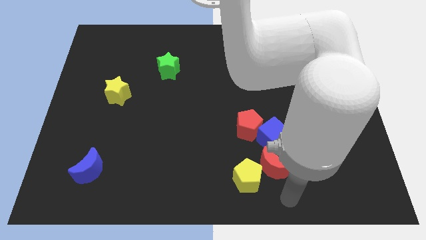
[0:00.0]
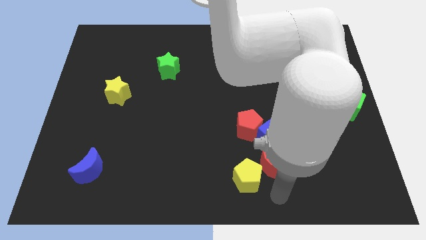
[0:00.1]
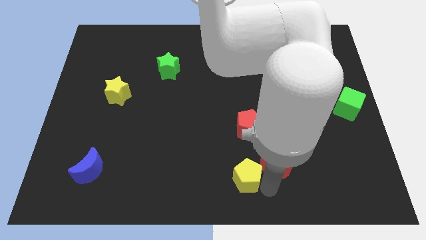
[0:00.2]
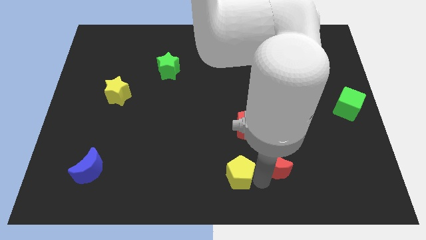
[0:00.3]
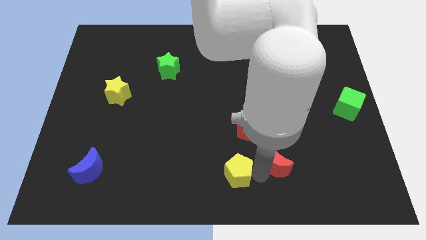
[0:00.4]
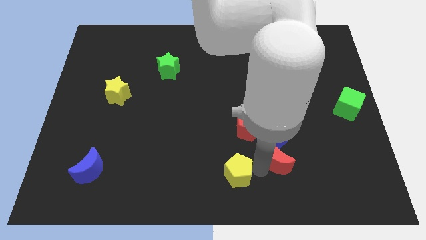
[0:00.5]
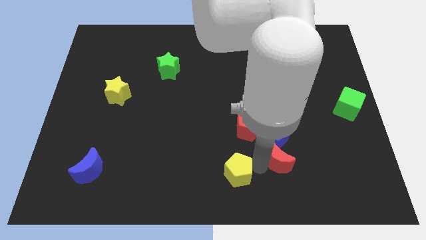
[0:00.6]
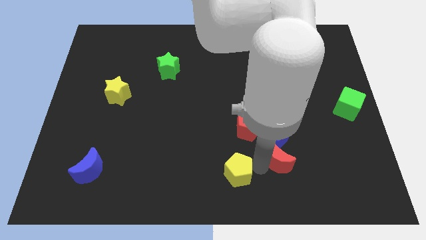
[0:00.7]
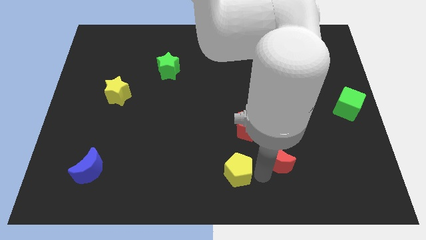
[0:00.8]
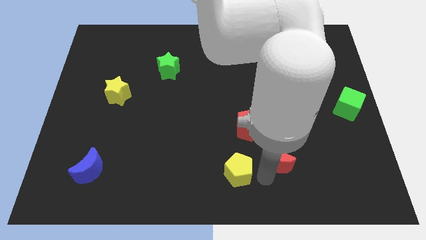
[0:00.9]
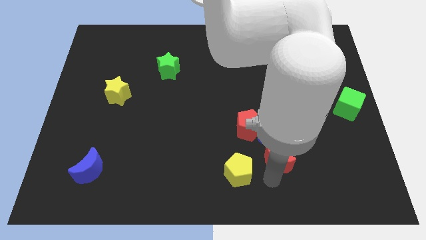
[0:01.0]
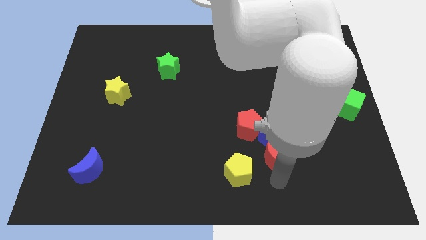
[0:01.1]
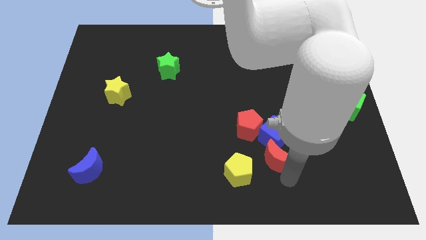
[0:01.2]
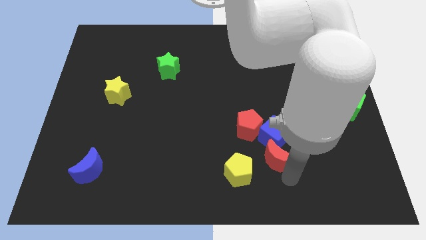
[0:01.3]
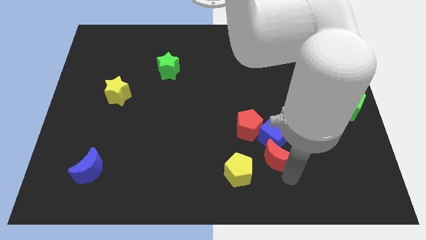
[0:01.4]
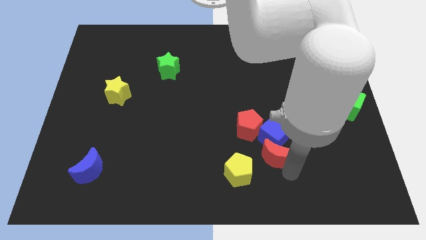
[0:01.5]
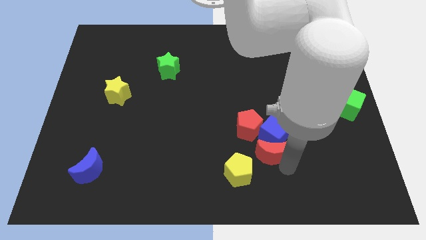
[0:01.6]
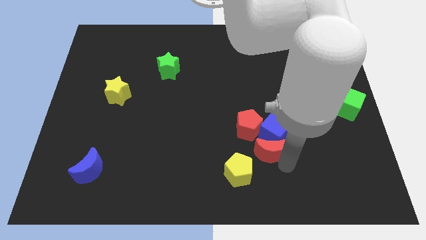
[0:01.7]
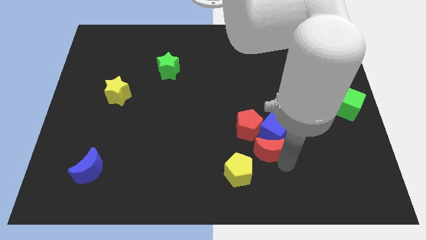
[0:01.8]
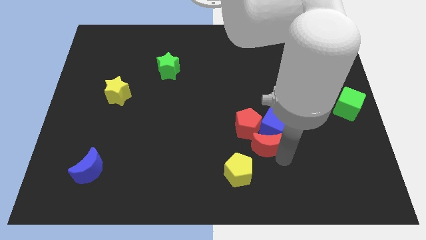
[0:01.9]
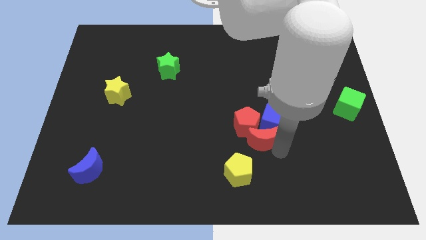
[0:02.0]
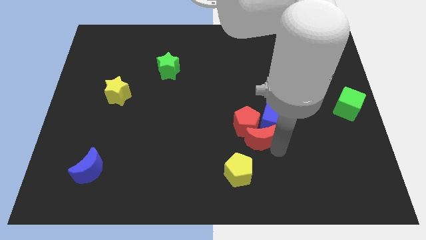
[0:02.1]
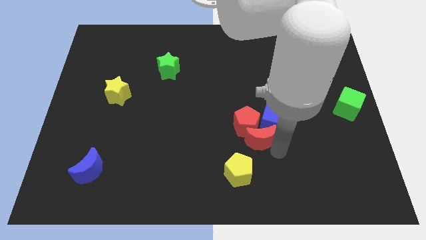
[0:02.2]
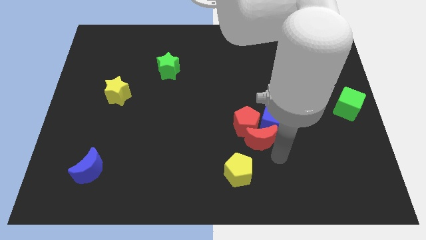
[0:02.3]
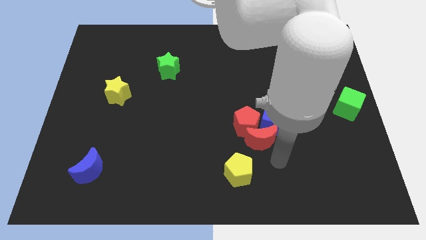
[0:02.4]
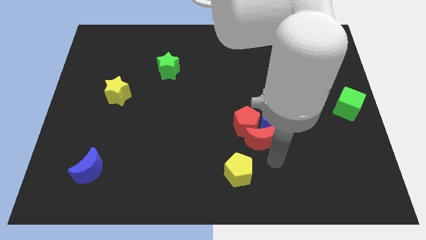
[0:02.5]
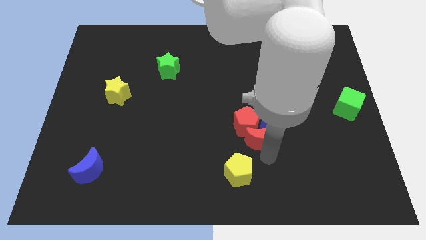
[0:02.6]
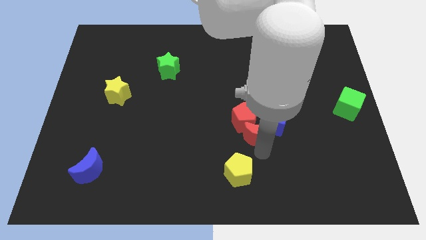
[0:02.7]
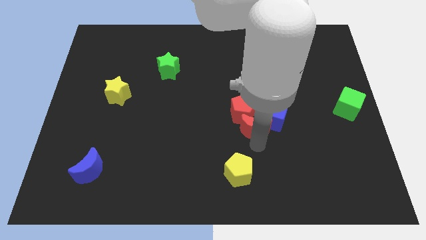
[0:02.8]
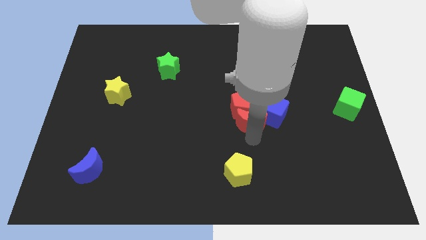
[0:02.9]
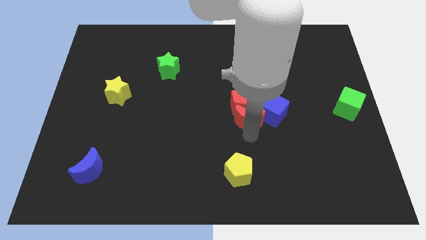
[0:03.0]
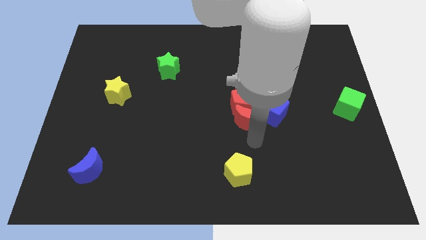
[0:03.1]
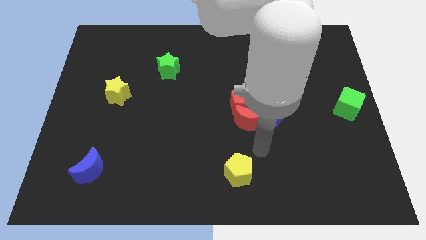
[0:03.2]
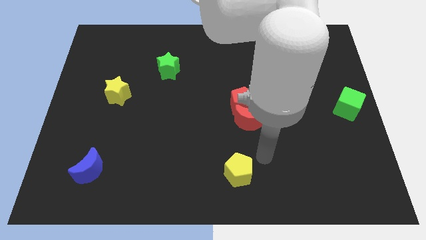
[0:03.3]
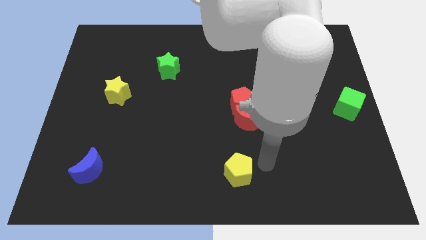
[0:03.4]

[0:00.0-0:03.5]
push the red crescent with red pentagon to the center

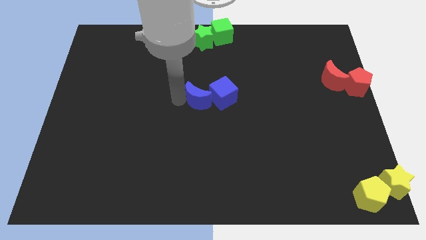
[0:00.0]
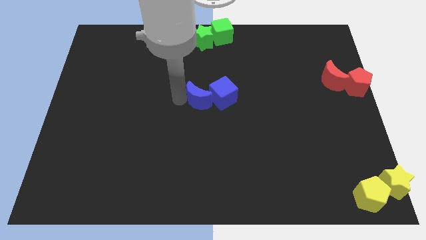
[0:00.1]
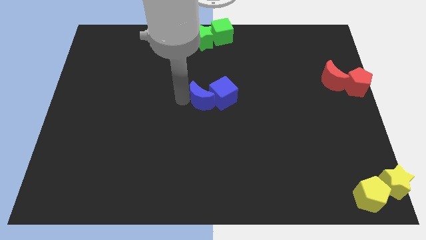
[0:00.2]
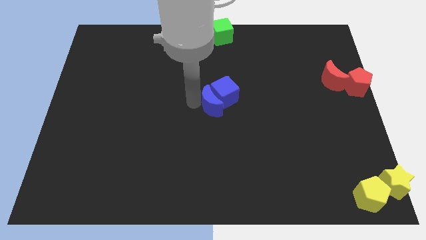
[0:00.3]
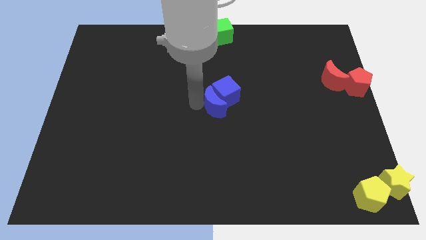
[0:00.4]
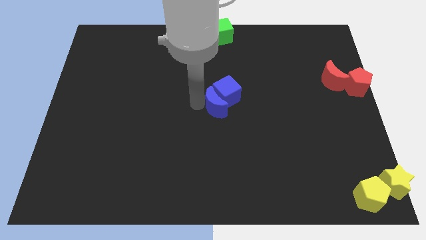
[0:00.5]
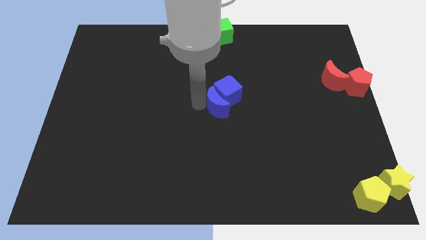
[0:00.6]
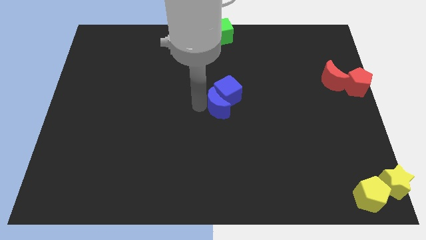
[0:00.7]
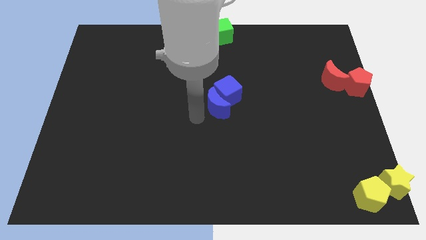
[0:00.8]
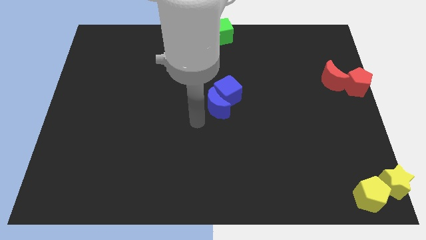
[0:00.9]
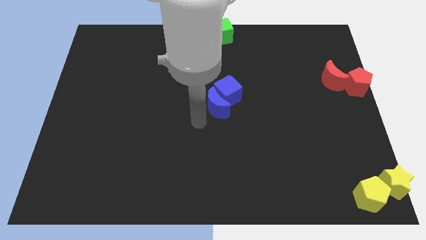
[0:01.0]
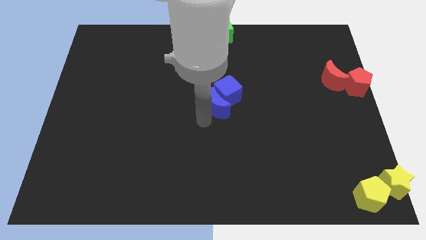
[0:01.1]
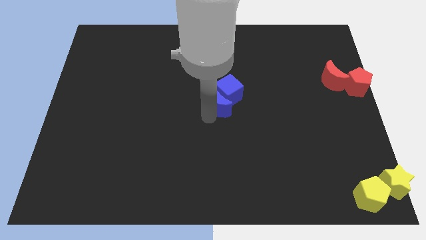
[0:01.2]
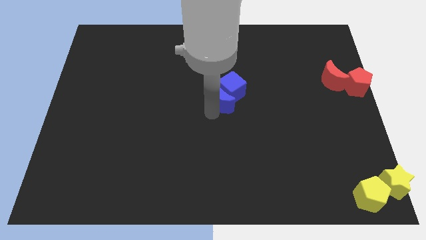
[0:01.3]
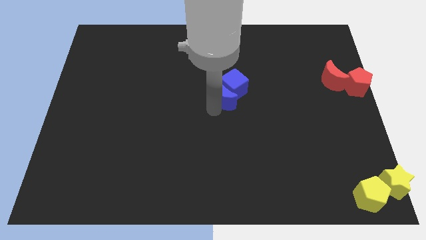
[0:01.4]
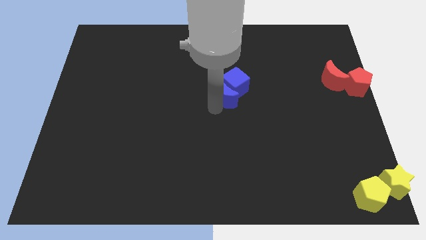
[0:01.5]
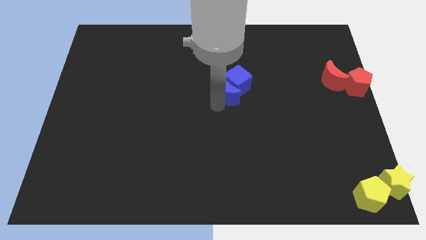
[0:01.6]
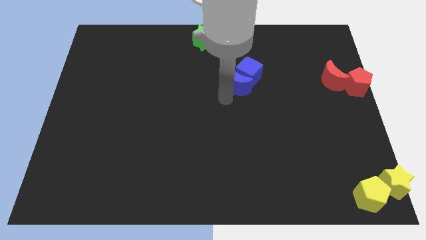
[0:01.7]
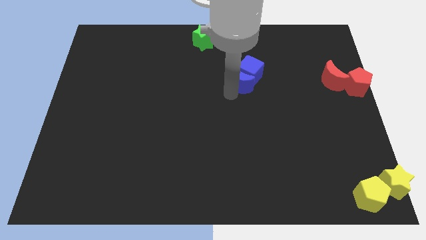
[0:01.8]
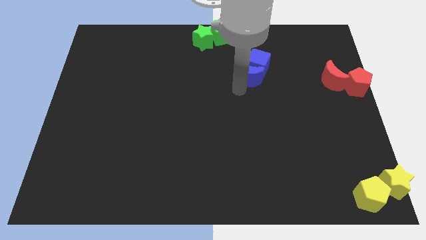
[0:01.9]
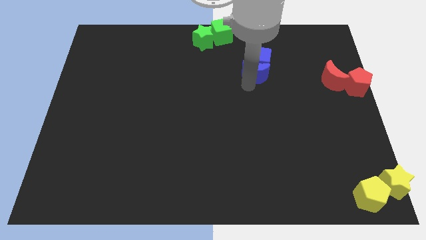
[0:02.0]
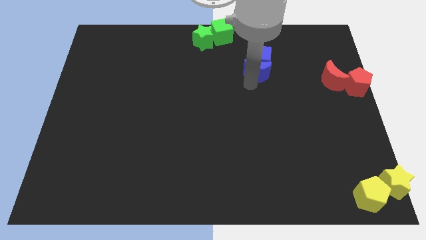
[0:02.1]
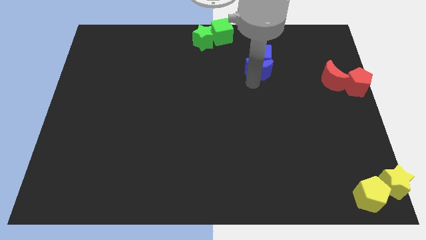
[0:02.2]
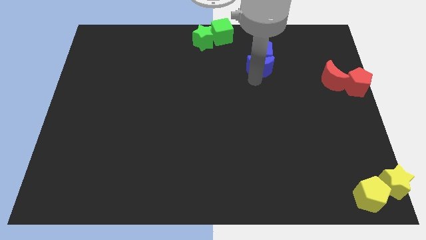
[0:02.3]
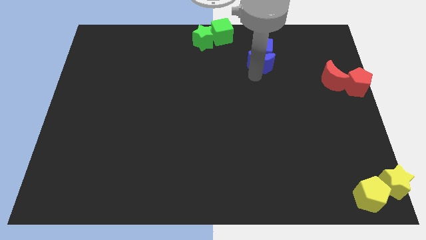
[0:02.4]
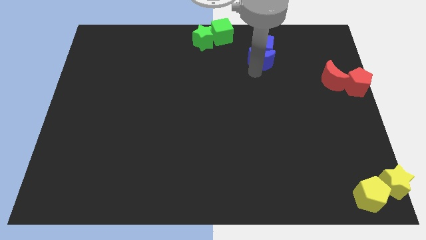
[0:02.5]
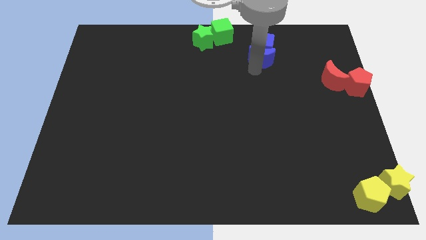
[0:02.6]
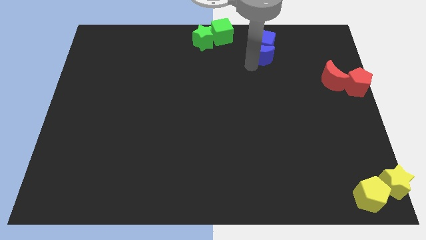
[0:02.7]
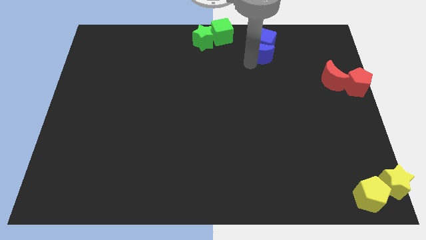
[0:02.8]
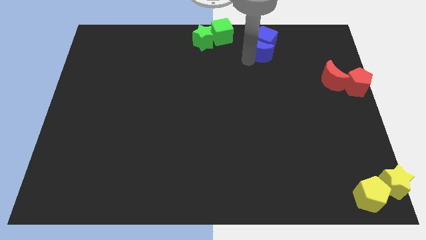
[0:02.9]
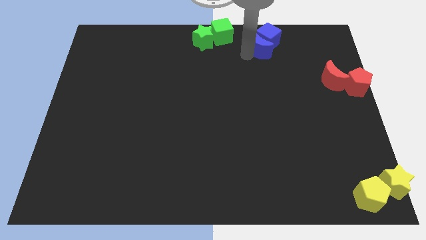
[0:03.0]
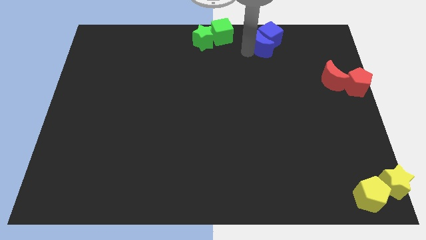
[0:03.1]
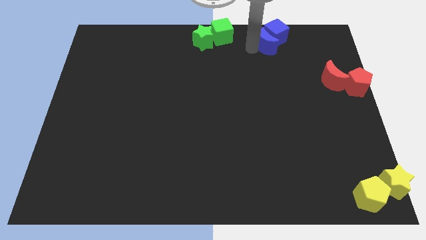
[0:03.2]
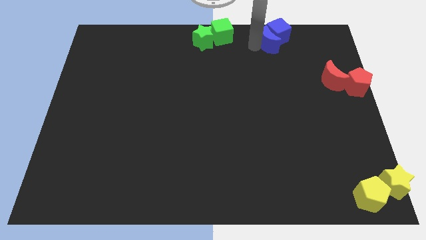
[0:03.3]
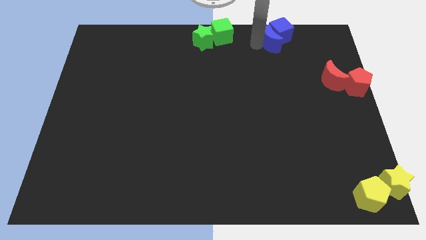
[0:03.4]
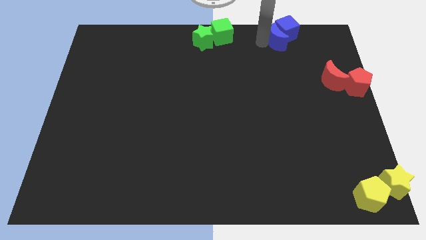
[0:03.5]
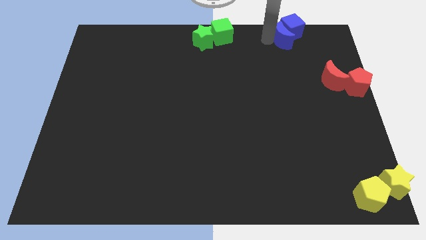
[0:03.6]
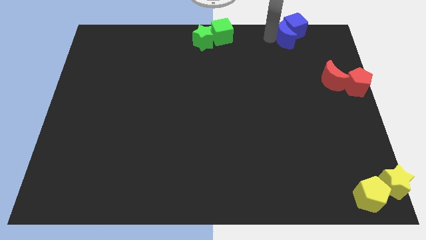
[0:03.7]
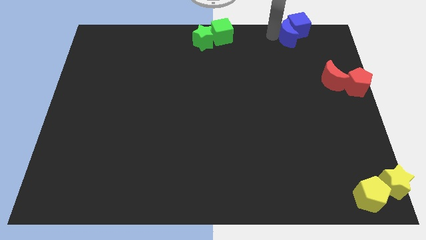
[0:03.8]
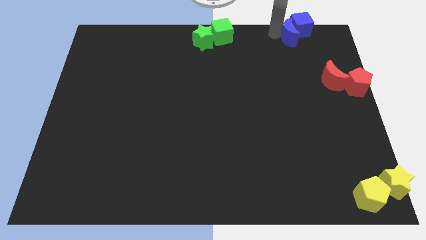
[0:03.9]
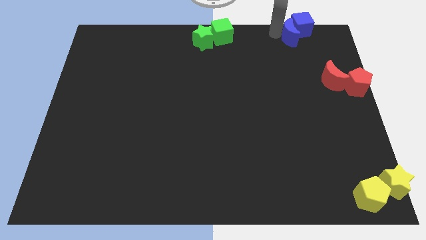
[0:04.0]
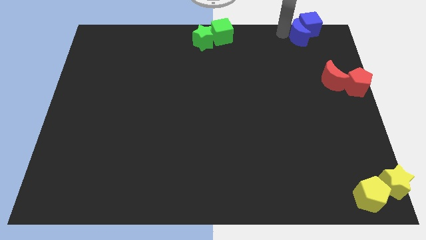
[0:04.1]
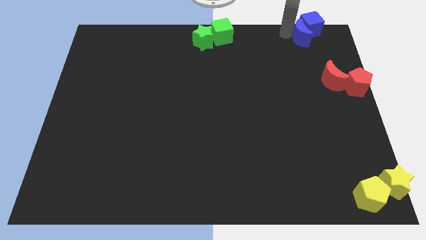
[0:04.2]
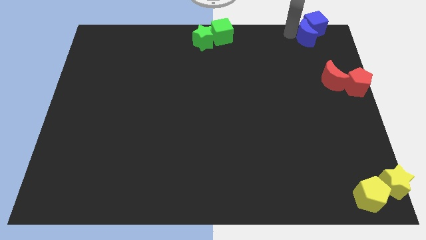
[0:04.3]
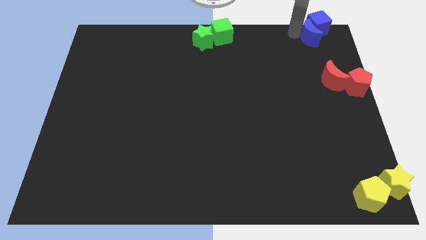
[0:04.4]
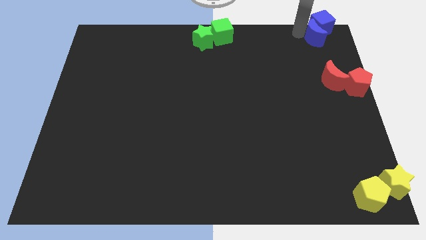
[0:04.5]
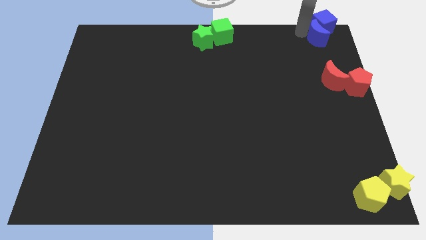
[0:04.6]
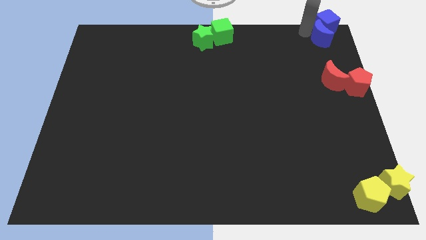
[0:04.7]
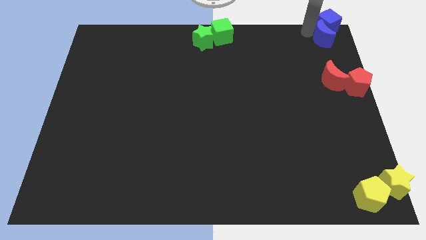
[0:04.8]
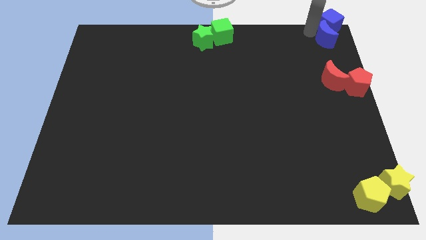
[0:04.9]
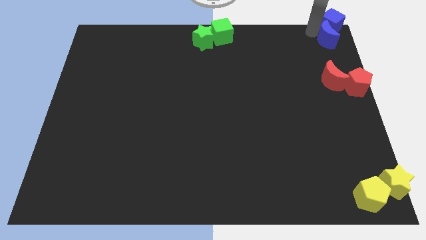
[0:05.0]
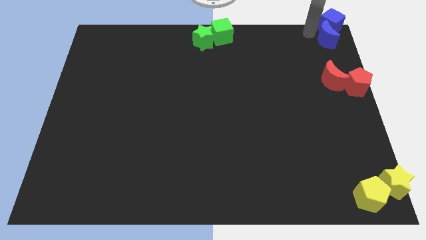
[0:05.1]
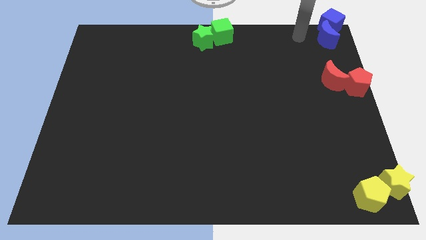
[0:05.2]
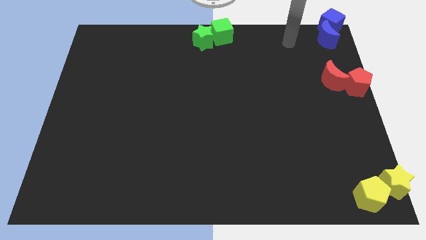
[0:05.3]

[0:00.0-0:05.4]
push the blue crescent along with the blue cube to the top right
